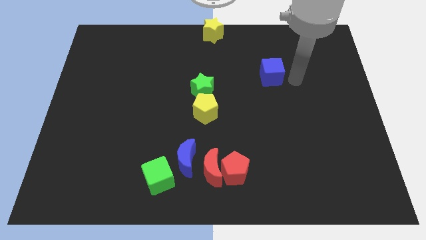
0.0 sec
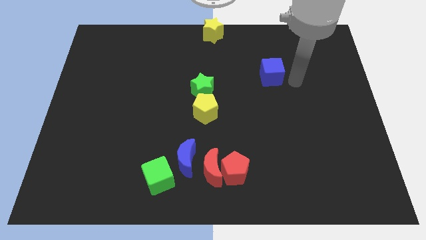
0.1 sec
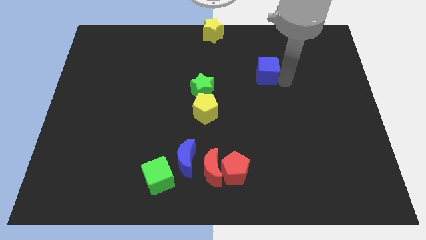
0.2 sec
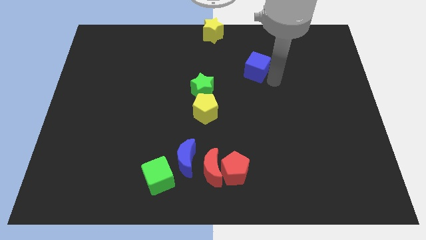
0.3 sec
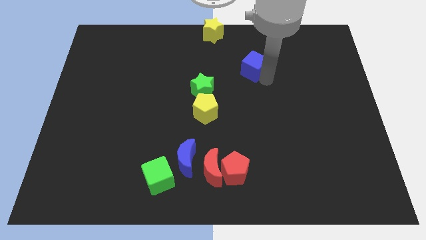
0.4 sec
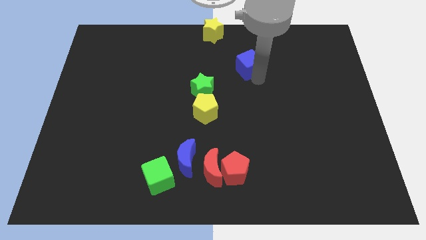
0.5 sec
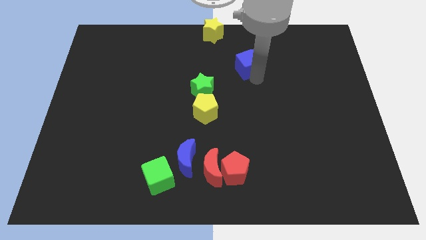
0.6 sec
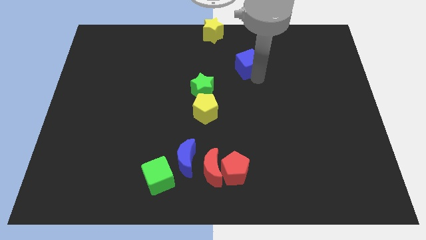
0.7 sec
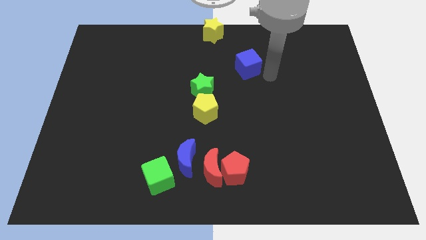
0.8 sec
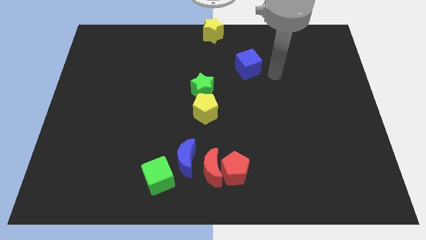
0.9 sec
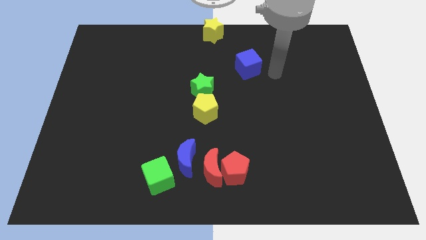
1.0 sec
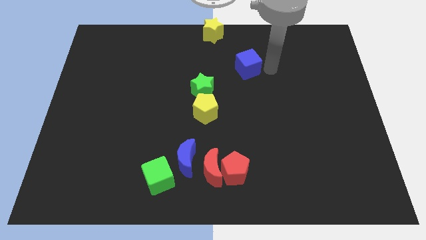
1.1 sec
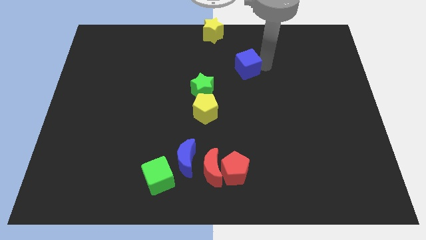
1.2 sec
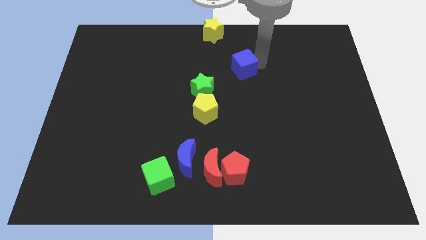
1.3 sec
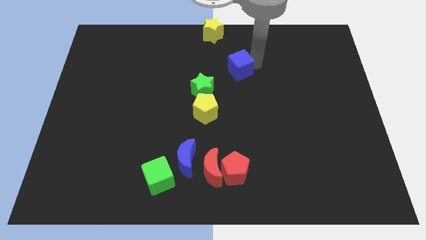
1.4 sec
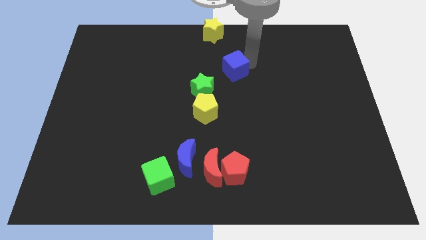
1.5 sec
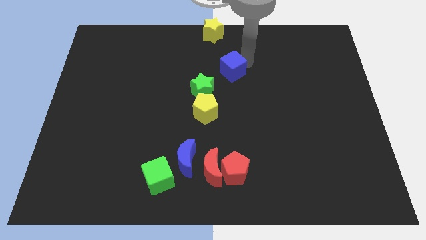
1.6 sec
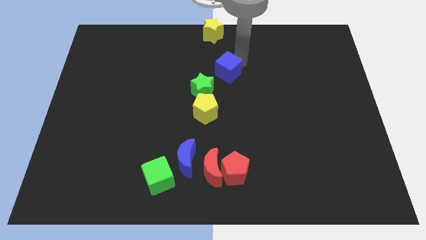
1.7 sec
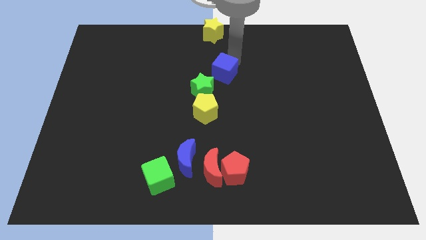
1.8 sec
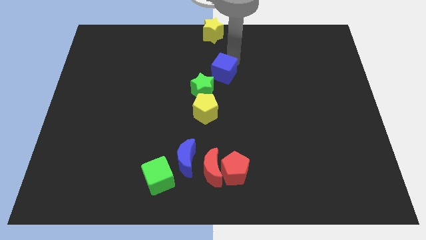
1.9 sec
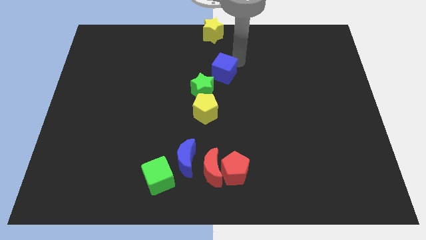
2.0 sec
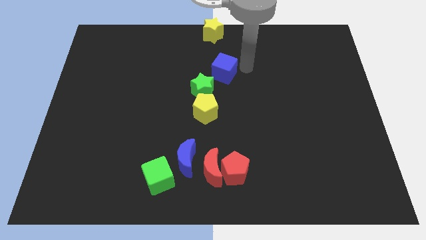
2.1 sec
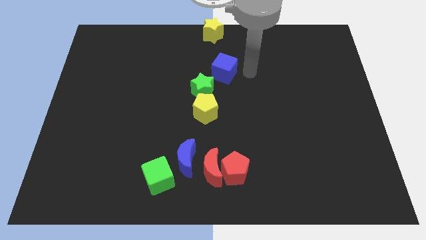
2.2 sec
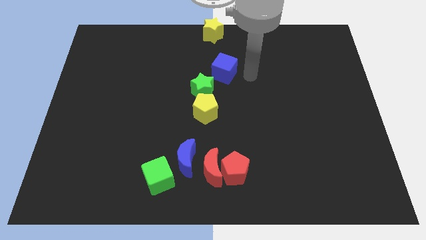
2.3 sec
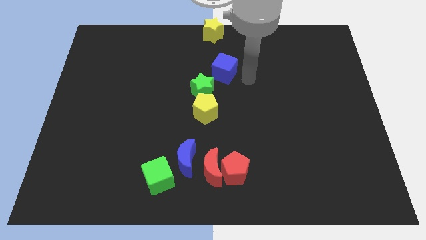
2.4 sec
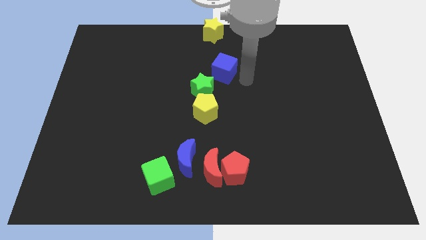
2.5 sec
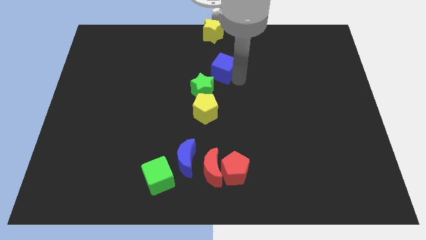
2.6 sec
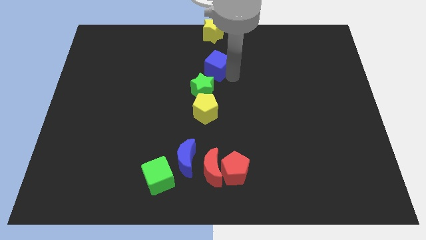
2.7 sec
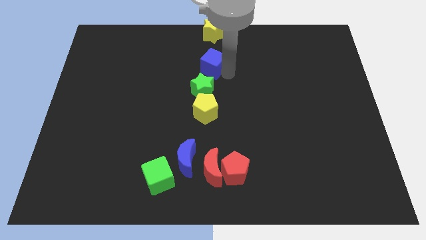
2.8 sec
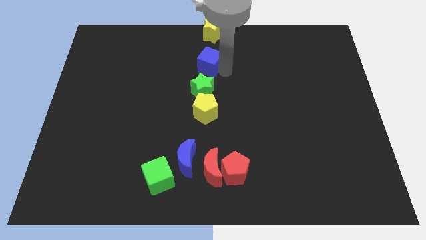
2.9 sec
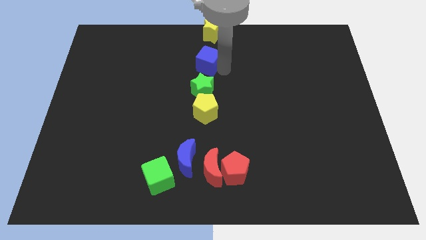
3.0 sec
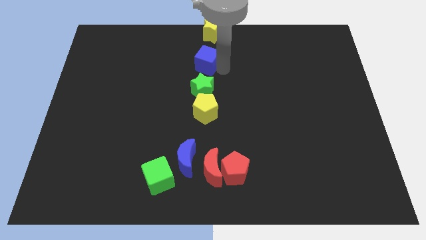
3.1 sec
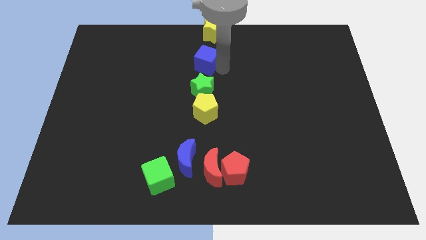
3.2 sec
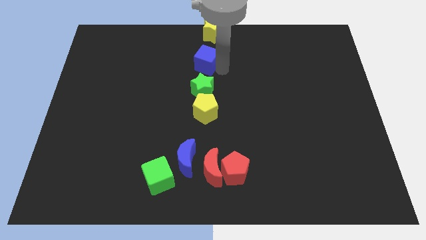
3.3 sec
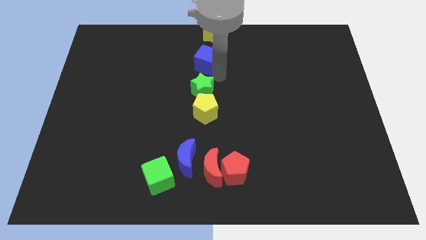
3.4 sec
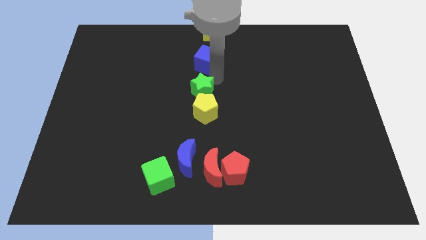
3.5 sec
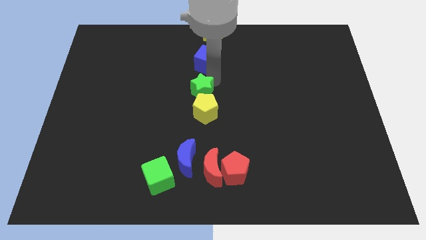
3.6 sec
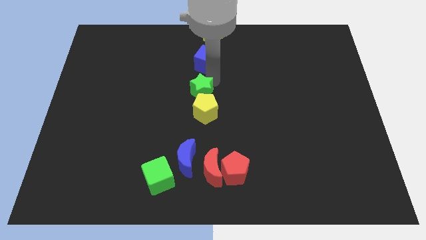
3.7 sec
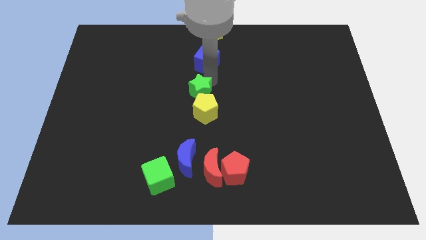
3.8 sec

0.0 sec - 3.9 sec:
put the blue cube vertically above the green star

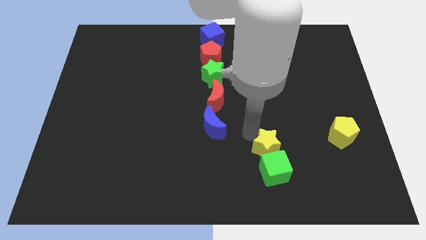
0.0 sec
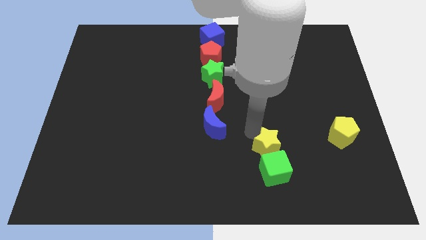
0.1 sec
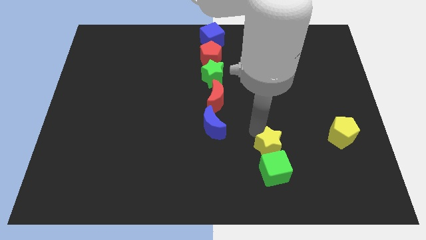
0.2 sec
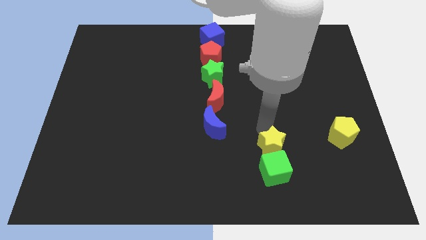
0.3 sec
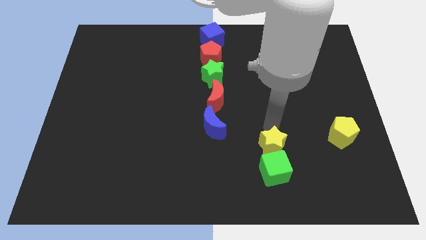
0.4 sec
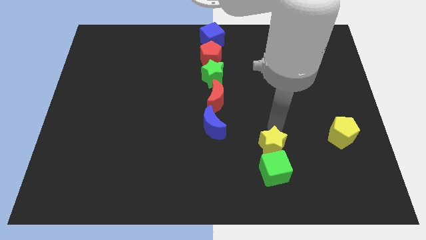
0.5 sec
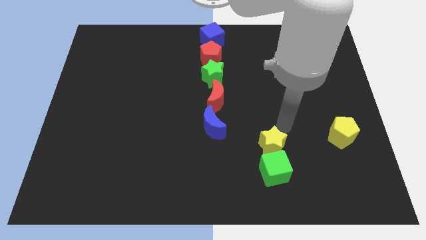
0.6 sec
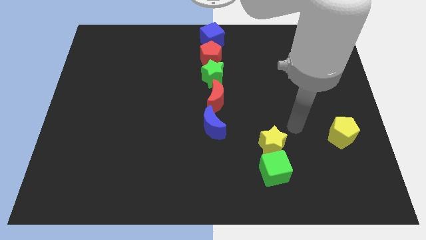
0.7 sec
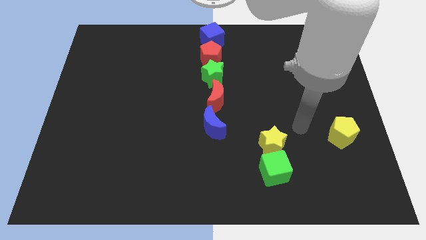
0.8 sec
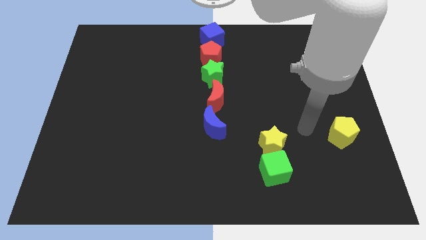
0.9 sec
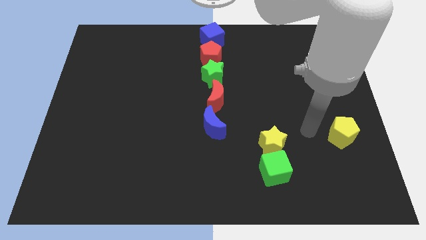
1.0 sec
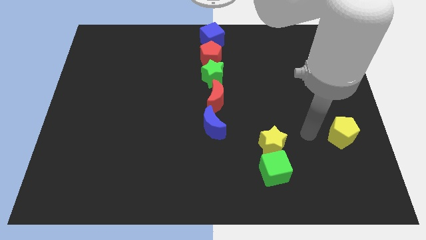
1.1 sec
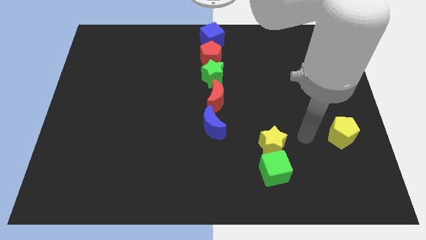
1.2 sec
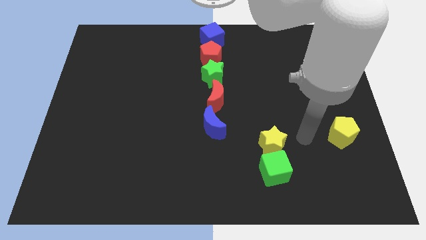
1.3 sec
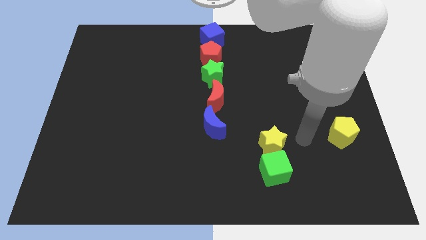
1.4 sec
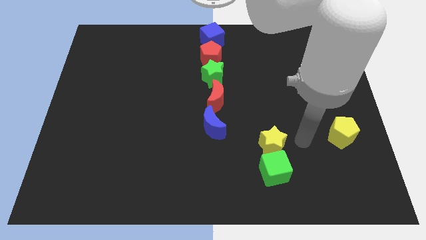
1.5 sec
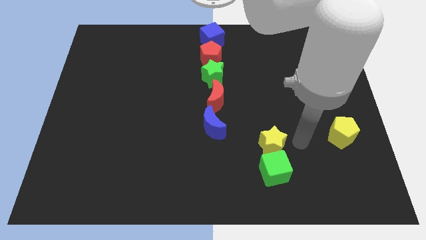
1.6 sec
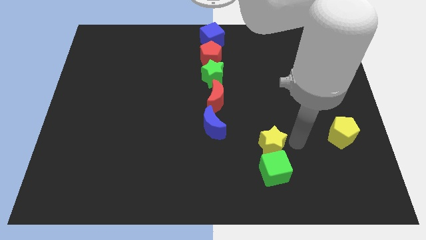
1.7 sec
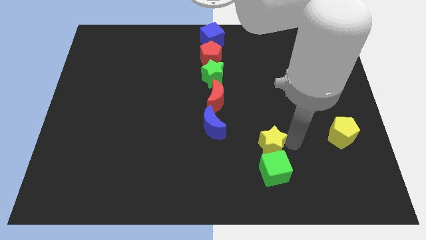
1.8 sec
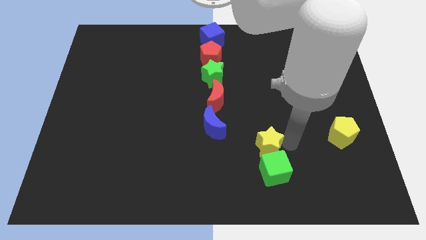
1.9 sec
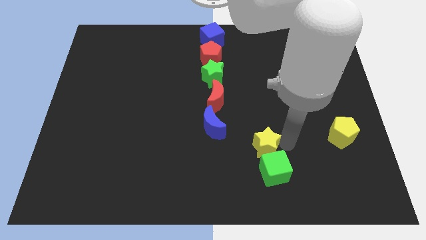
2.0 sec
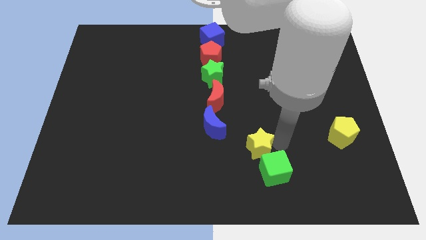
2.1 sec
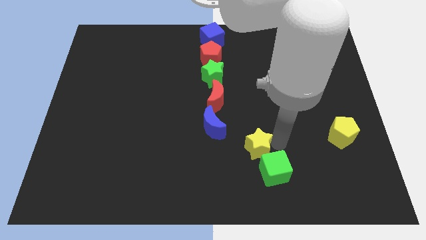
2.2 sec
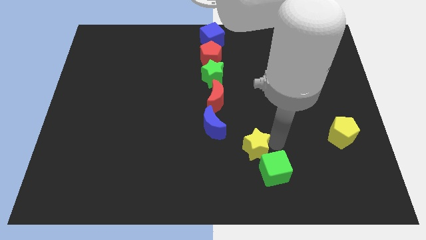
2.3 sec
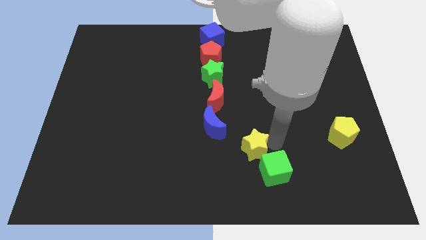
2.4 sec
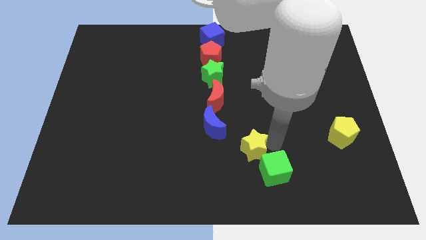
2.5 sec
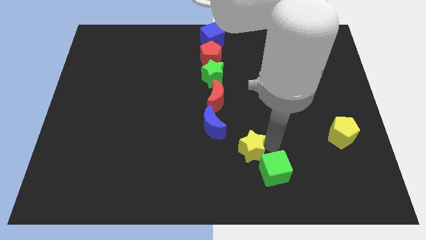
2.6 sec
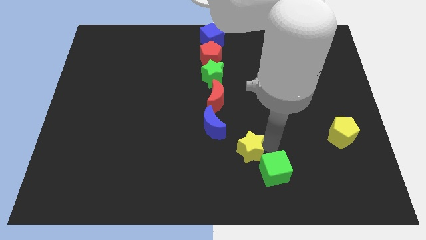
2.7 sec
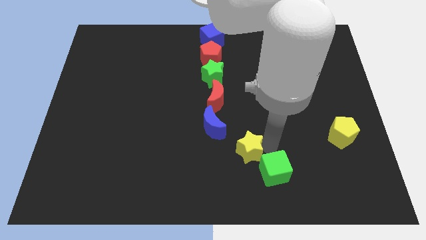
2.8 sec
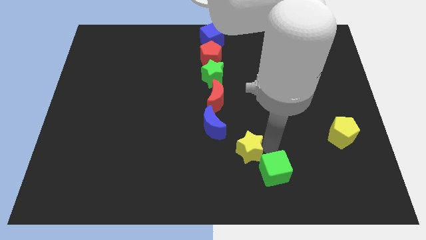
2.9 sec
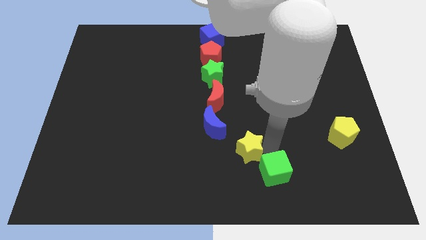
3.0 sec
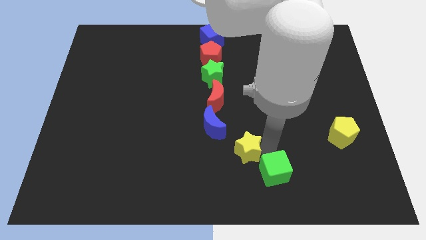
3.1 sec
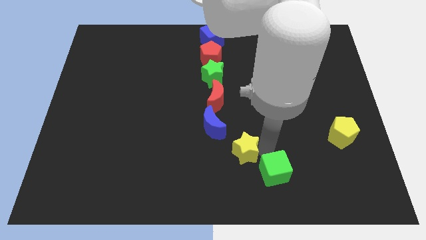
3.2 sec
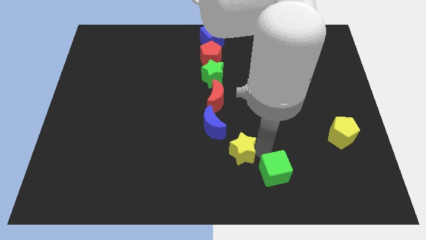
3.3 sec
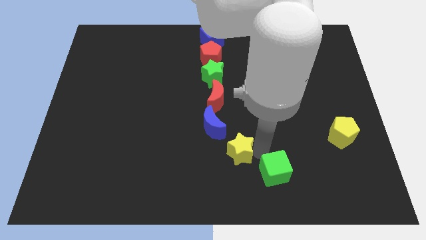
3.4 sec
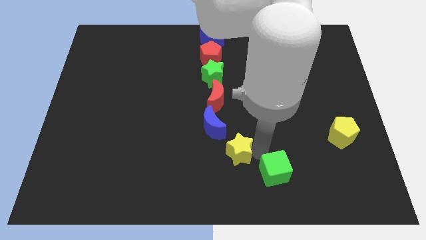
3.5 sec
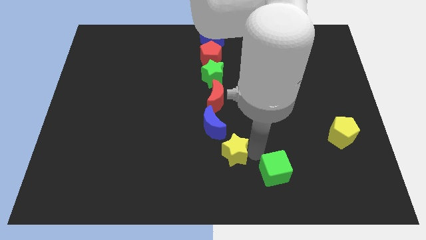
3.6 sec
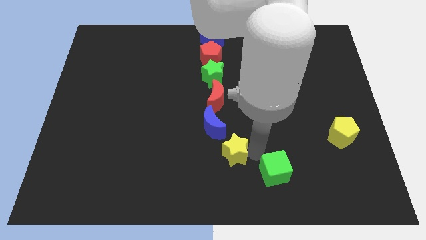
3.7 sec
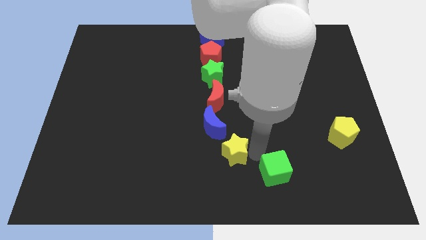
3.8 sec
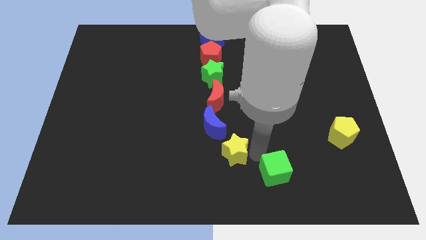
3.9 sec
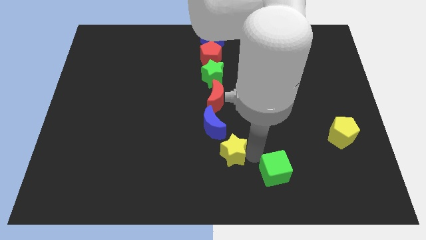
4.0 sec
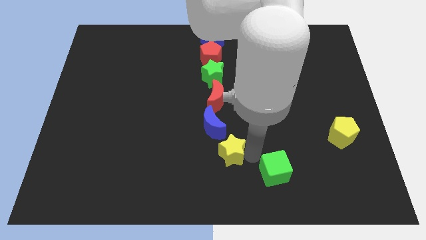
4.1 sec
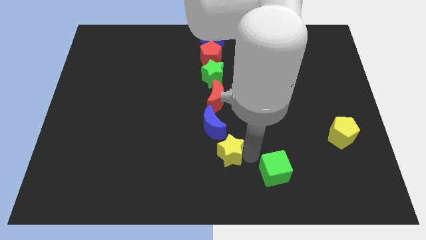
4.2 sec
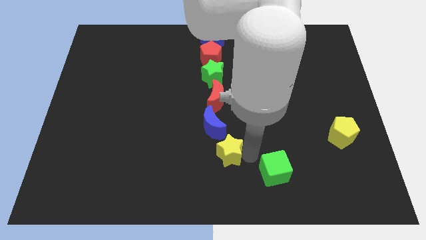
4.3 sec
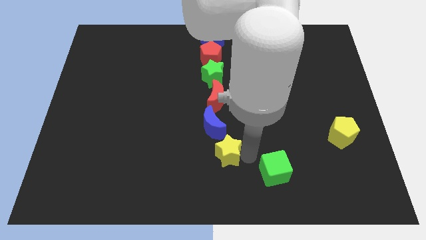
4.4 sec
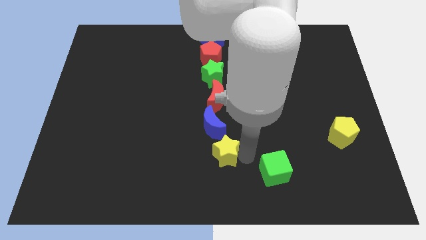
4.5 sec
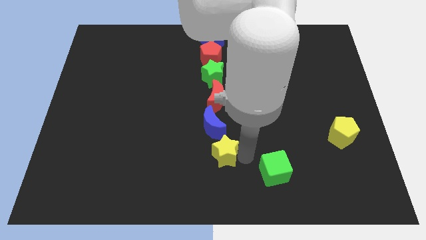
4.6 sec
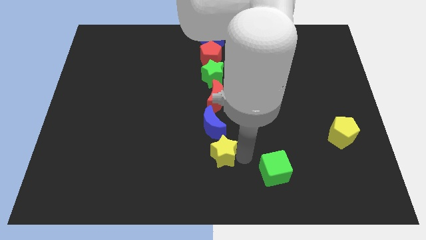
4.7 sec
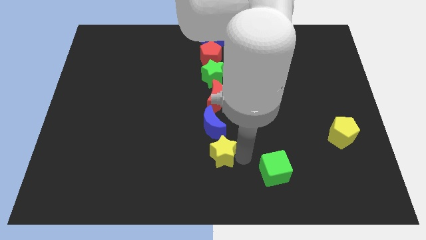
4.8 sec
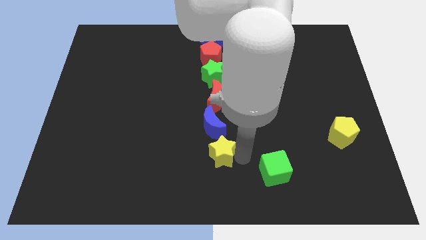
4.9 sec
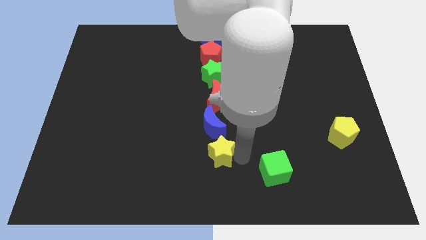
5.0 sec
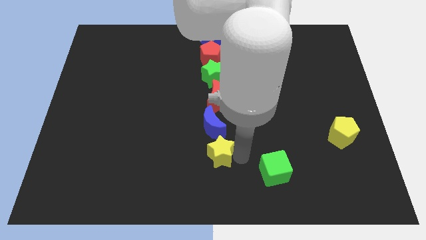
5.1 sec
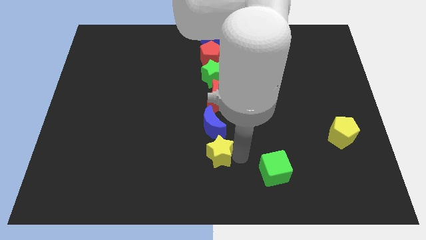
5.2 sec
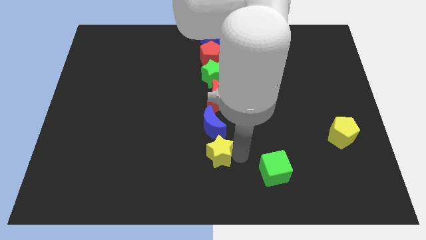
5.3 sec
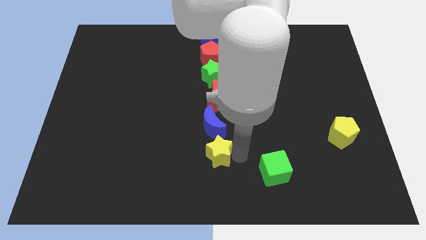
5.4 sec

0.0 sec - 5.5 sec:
push the yellow star to the bottom of the blue crescent
